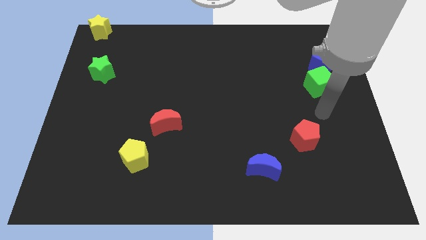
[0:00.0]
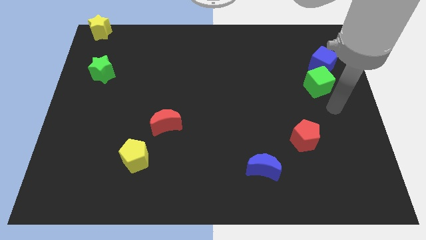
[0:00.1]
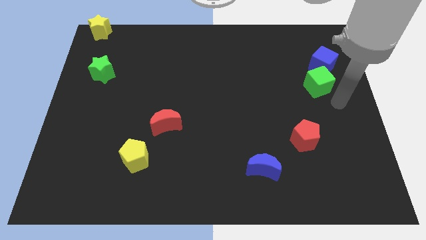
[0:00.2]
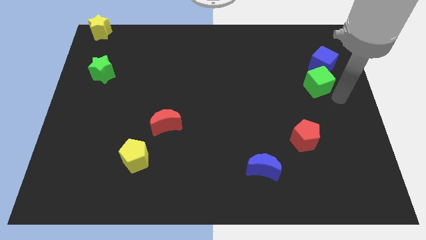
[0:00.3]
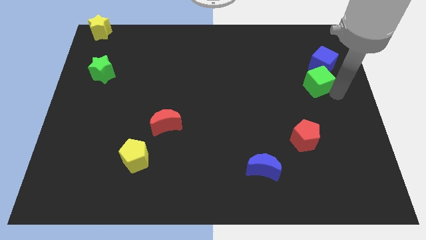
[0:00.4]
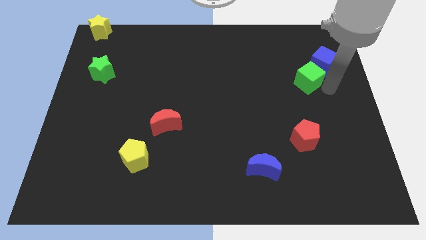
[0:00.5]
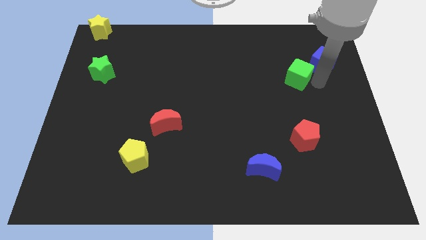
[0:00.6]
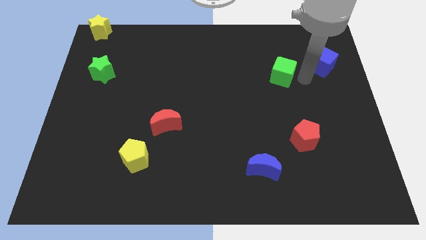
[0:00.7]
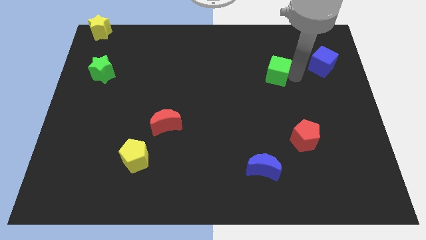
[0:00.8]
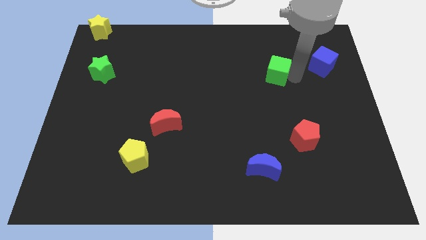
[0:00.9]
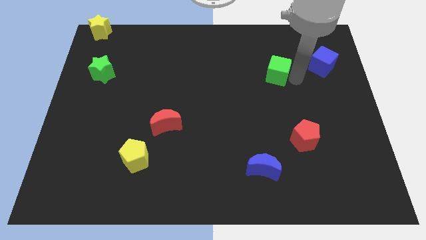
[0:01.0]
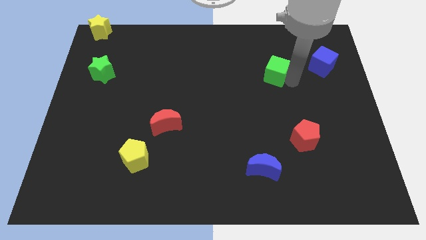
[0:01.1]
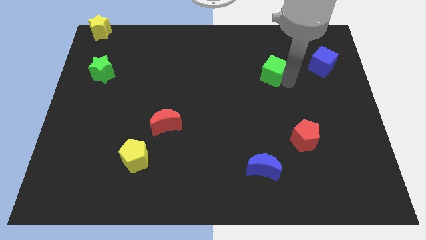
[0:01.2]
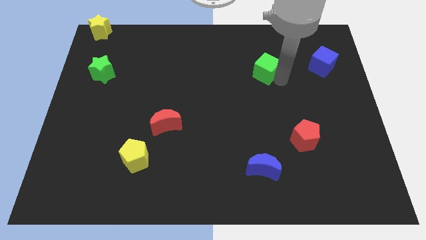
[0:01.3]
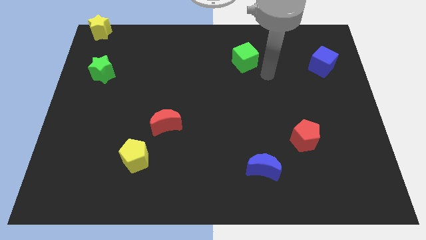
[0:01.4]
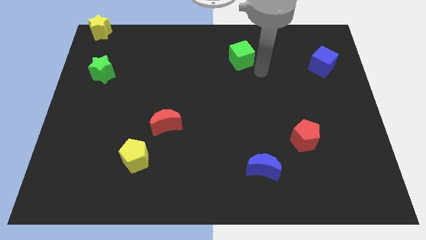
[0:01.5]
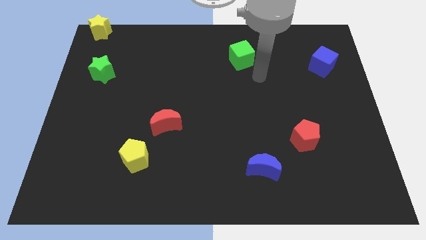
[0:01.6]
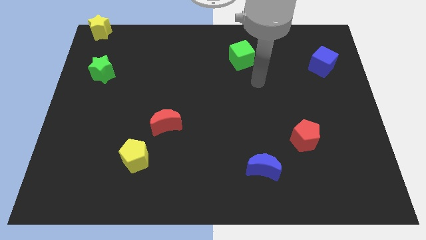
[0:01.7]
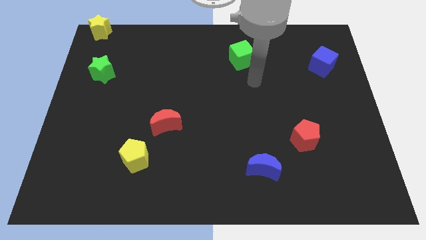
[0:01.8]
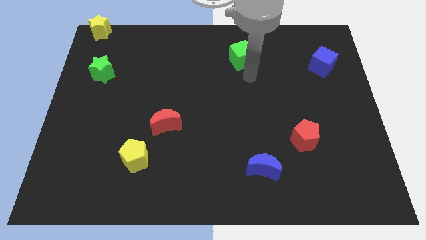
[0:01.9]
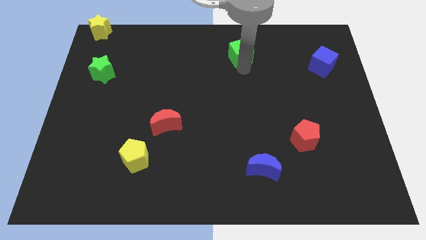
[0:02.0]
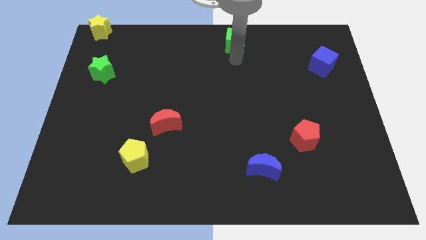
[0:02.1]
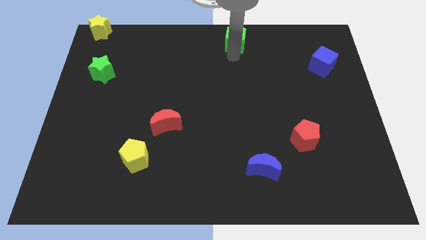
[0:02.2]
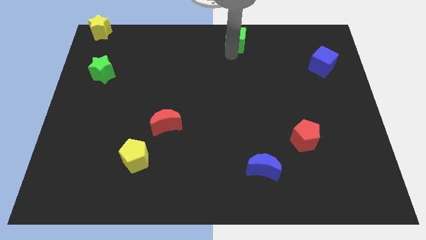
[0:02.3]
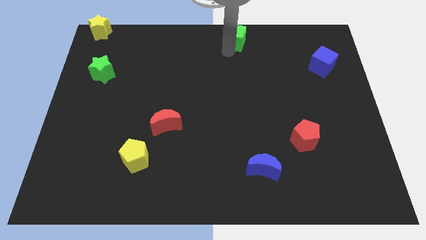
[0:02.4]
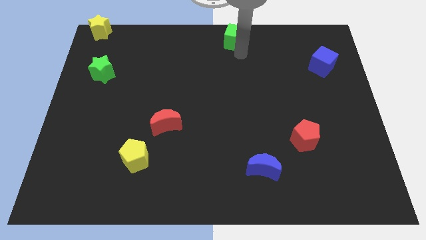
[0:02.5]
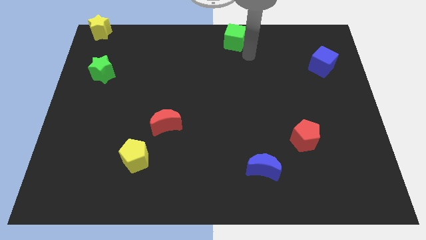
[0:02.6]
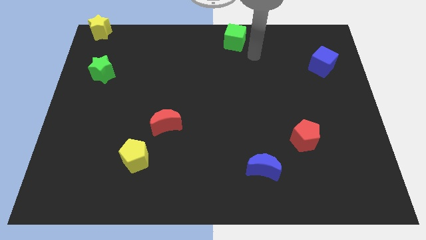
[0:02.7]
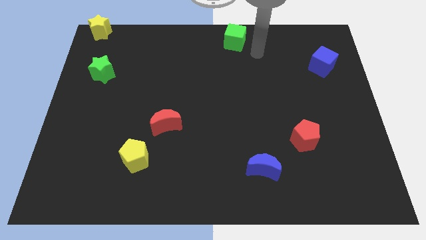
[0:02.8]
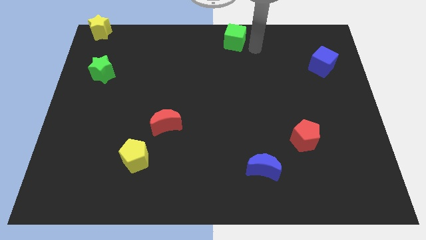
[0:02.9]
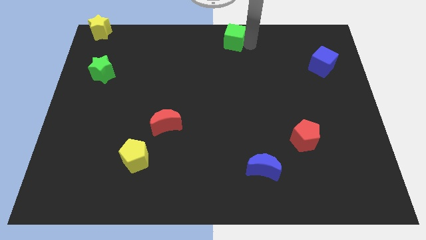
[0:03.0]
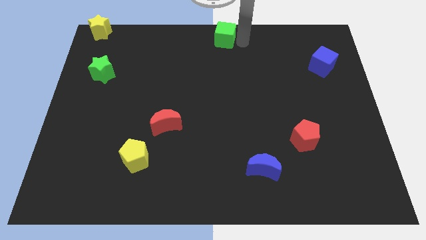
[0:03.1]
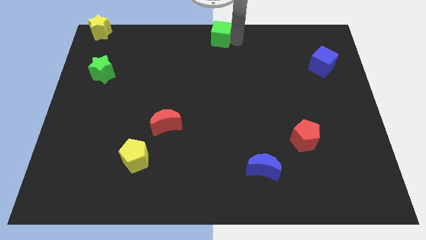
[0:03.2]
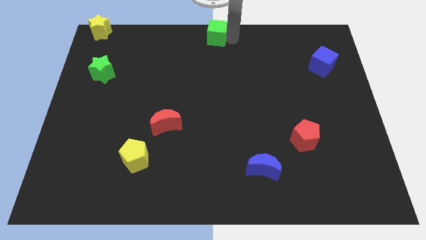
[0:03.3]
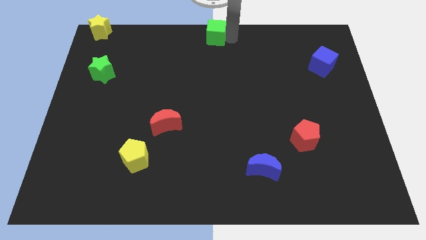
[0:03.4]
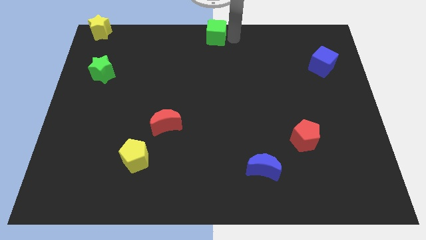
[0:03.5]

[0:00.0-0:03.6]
place the green cube to the top center of the board

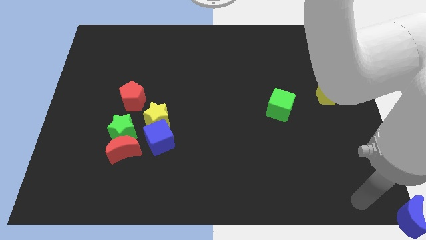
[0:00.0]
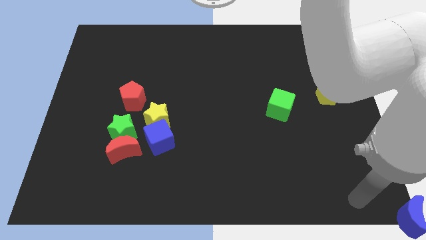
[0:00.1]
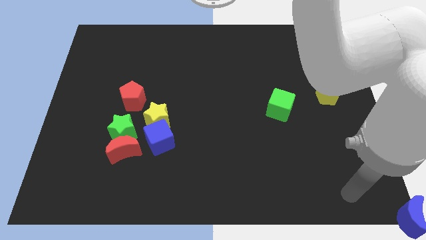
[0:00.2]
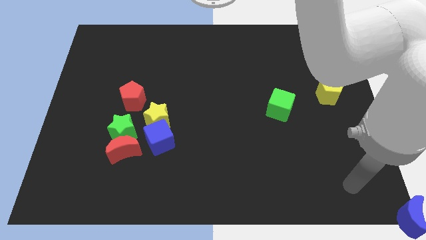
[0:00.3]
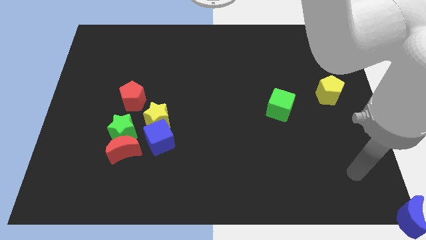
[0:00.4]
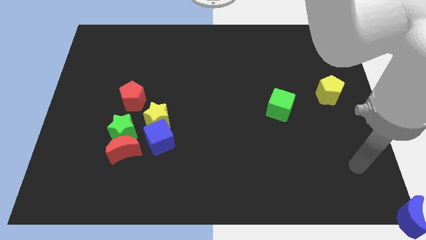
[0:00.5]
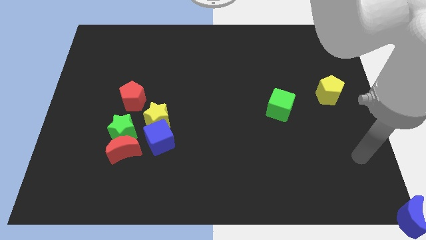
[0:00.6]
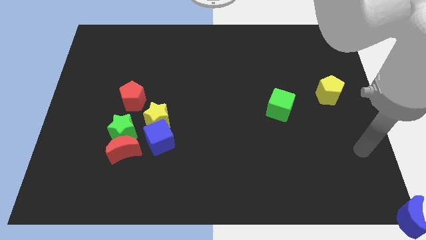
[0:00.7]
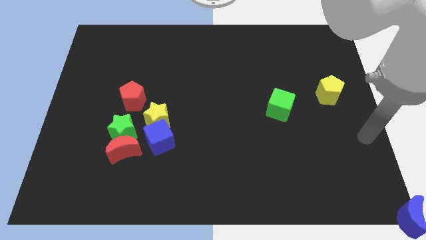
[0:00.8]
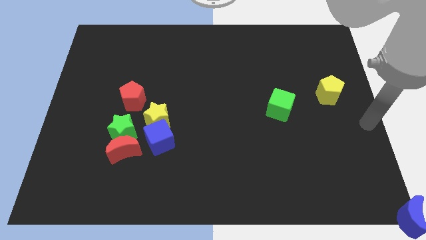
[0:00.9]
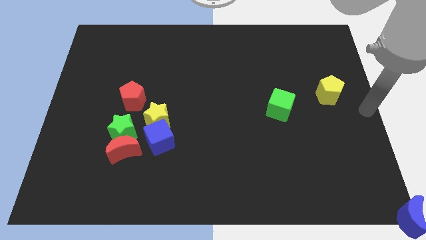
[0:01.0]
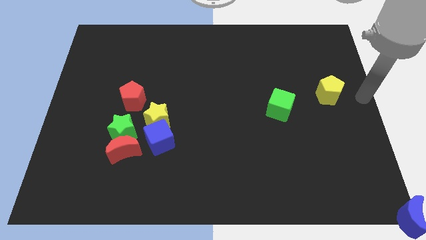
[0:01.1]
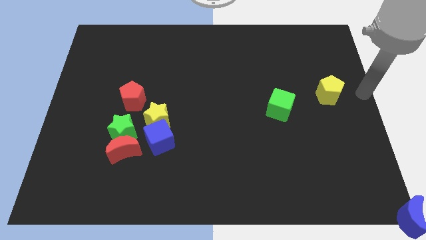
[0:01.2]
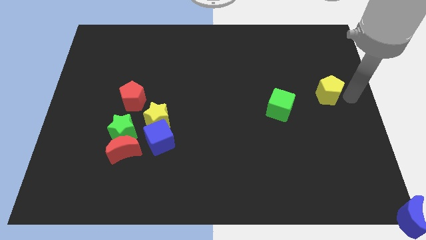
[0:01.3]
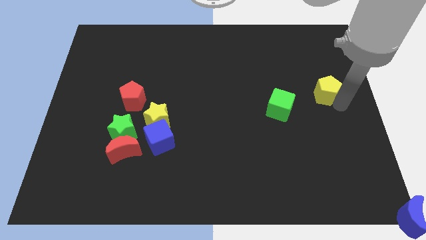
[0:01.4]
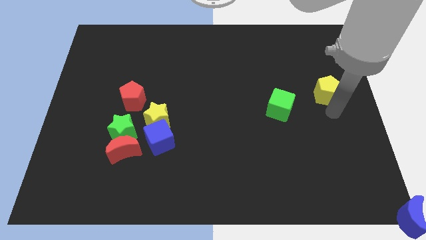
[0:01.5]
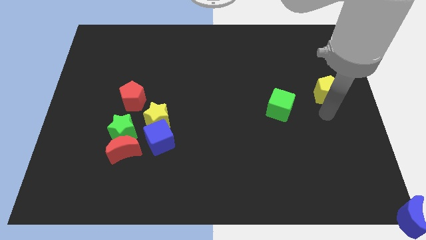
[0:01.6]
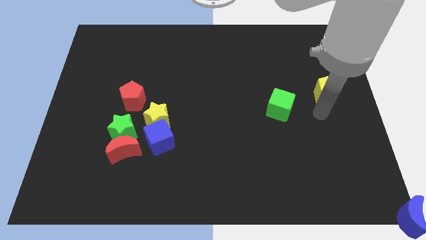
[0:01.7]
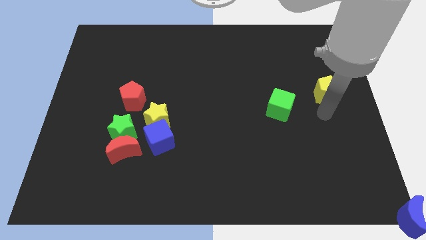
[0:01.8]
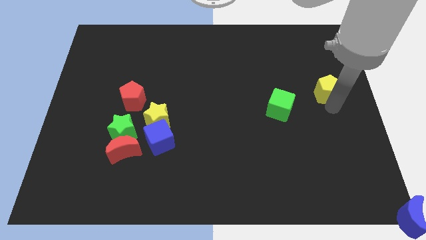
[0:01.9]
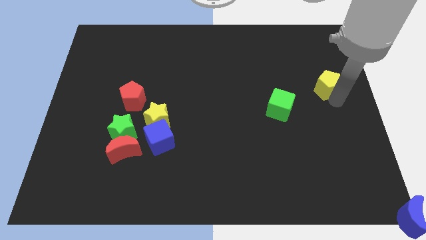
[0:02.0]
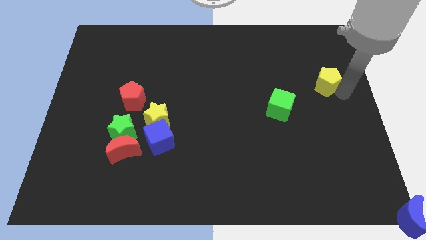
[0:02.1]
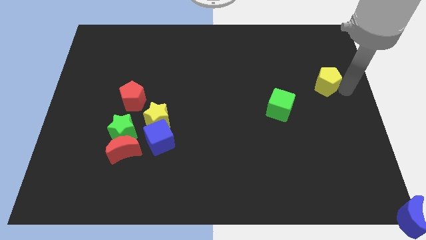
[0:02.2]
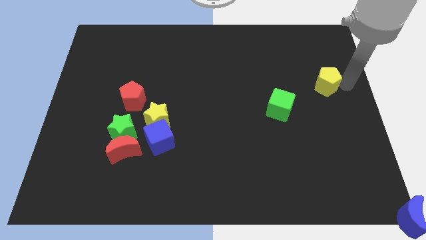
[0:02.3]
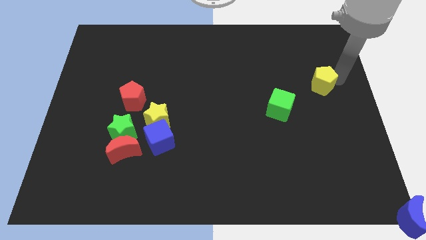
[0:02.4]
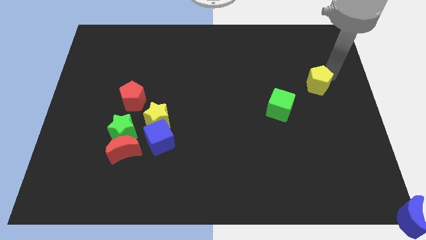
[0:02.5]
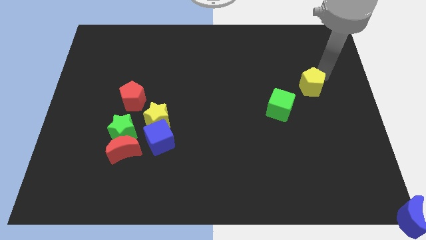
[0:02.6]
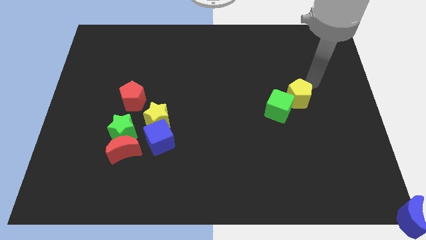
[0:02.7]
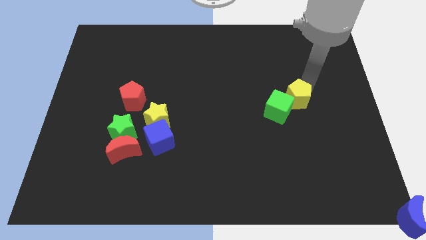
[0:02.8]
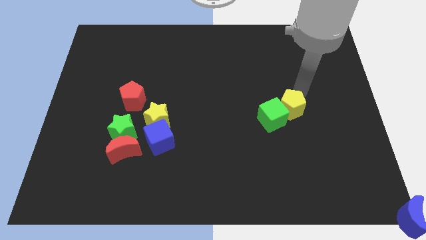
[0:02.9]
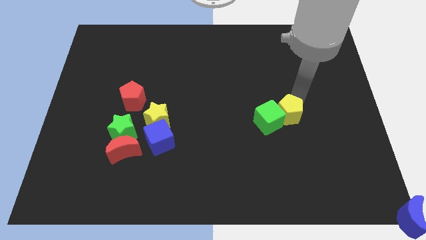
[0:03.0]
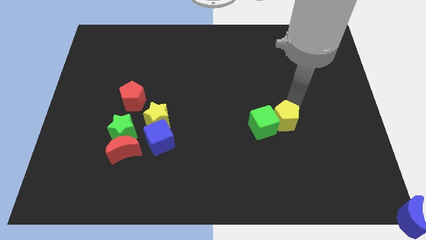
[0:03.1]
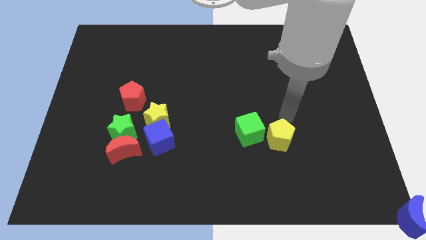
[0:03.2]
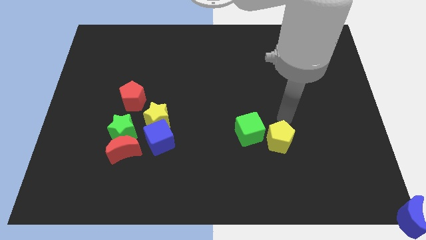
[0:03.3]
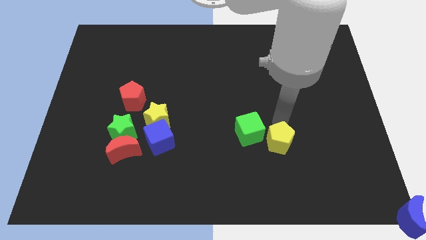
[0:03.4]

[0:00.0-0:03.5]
push the yellow pentagon into the green cube

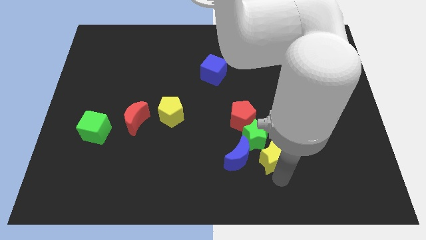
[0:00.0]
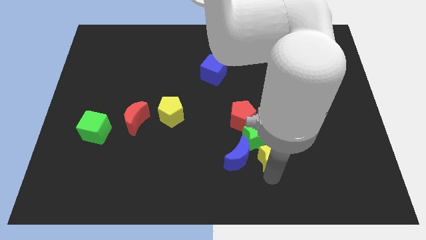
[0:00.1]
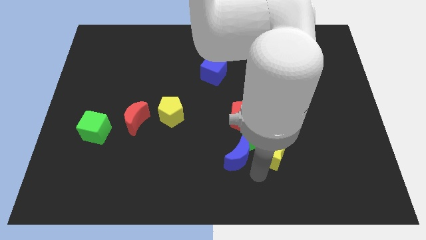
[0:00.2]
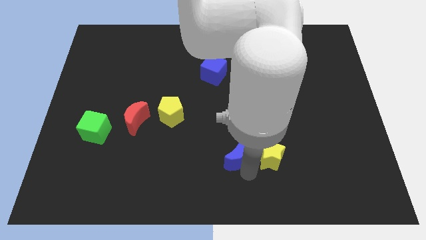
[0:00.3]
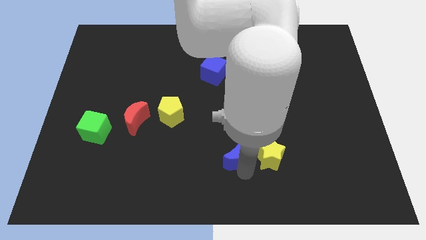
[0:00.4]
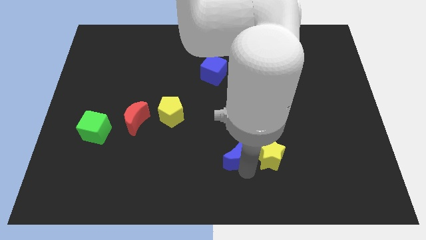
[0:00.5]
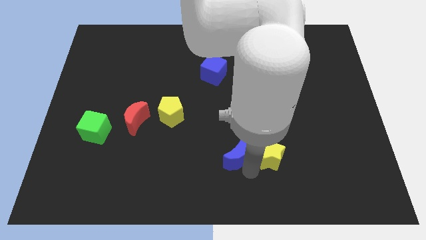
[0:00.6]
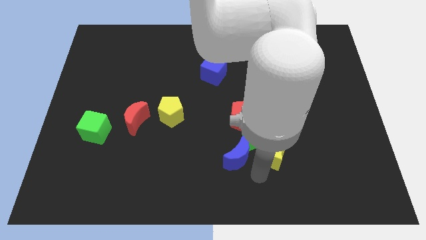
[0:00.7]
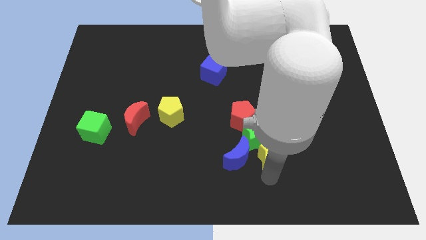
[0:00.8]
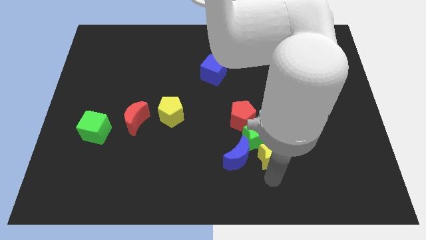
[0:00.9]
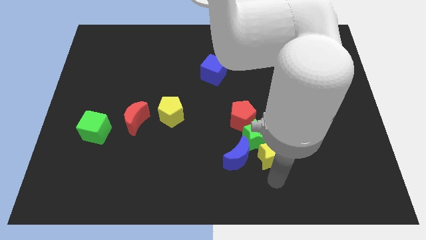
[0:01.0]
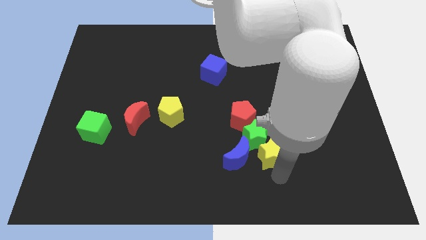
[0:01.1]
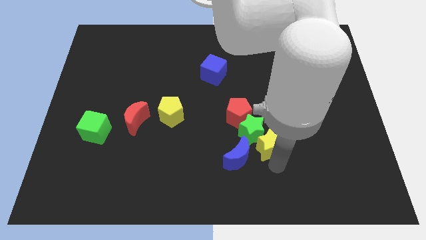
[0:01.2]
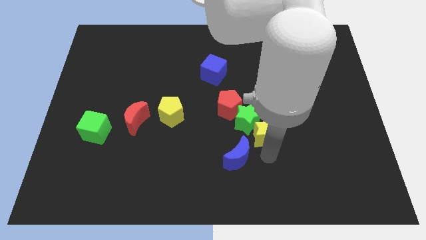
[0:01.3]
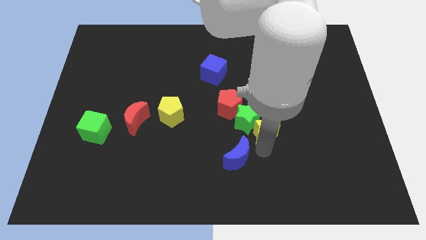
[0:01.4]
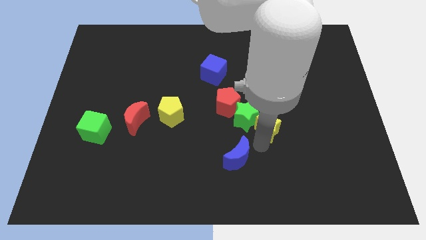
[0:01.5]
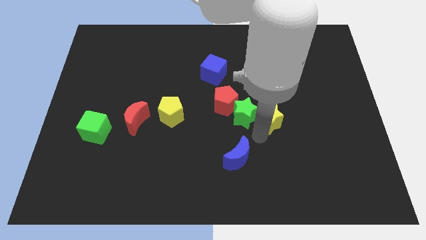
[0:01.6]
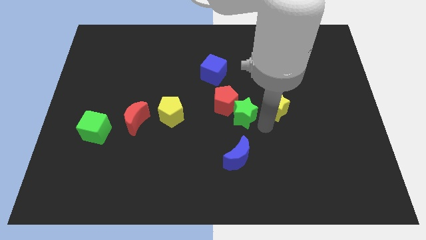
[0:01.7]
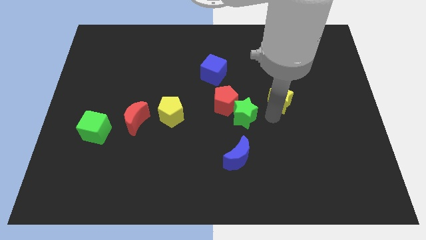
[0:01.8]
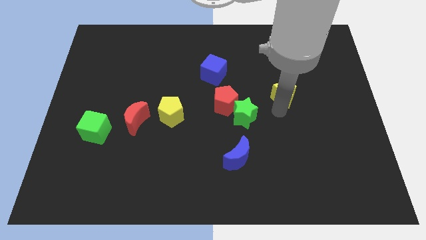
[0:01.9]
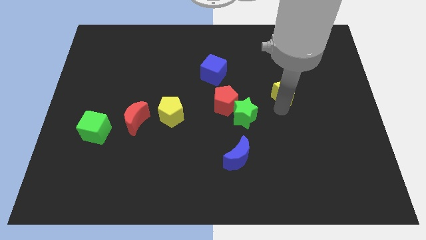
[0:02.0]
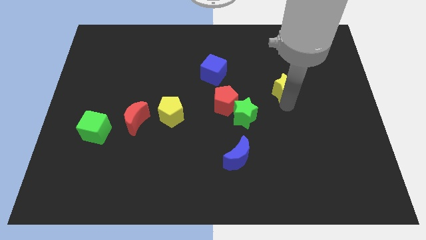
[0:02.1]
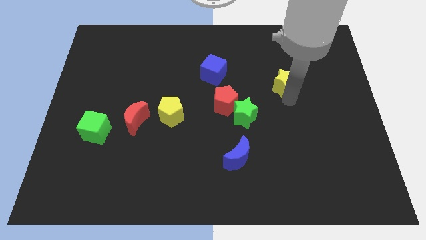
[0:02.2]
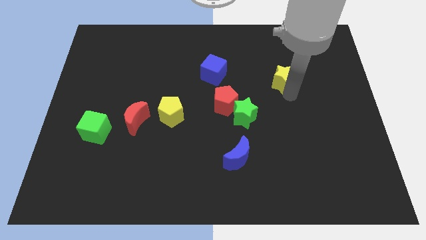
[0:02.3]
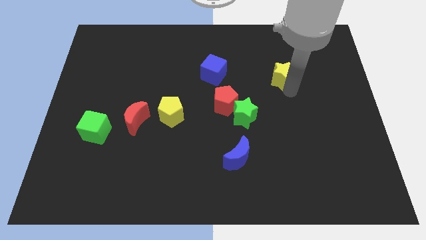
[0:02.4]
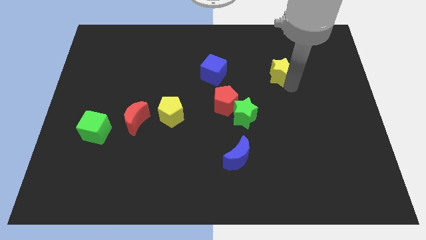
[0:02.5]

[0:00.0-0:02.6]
move the yellow star to the right of the blue cube
